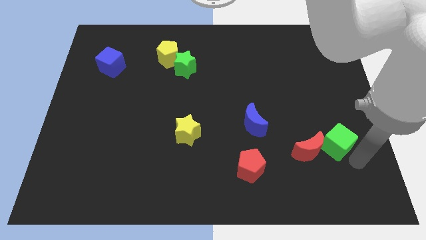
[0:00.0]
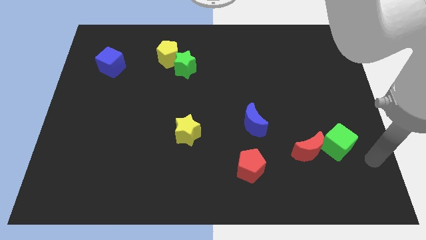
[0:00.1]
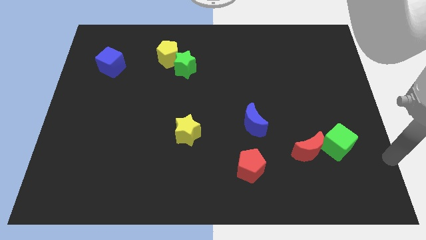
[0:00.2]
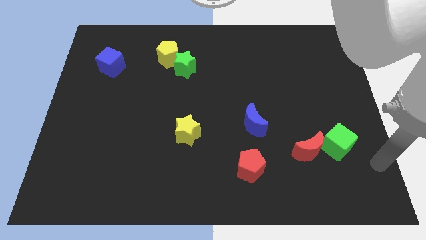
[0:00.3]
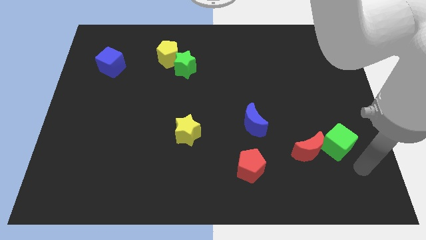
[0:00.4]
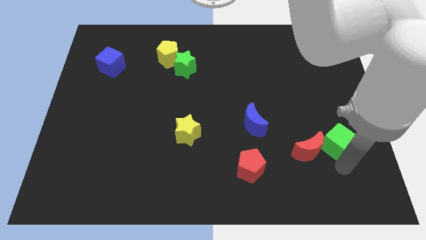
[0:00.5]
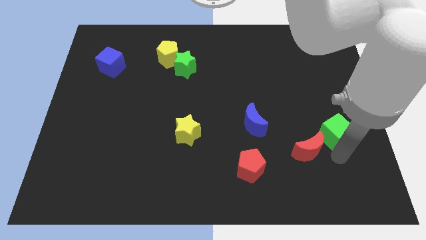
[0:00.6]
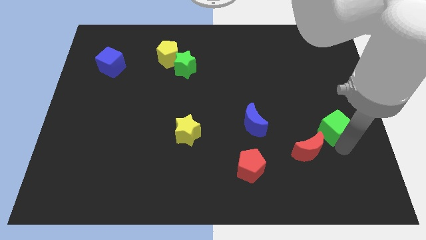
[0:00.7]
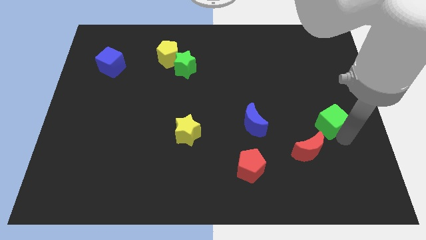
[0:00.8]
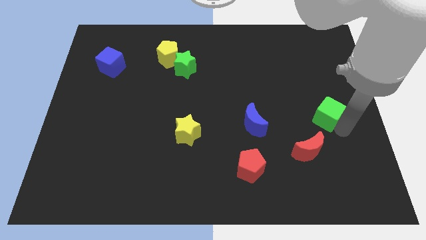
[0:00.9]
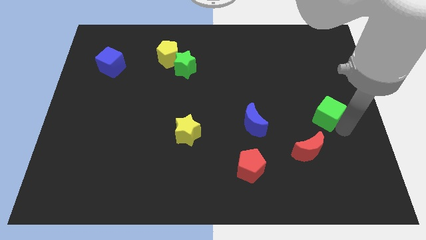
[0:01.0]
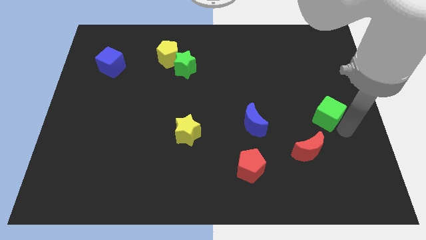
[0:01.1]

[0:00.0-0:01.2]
separate the green cube from the red crescent

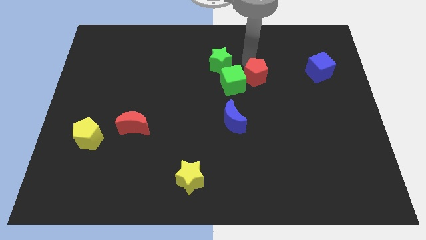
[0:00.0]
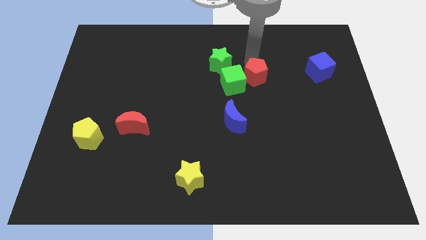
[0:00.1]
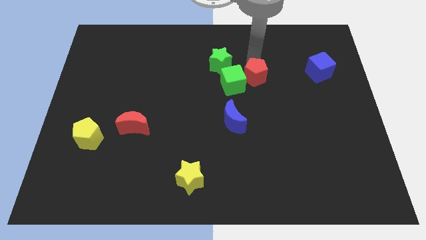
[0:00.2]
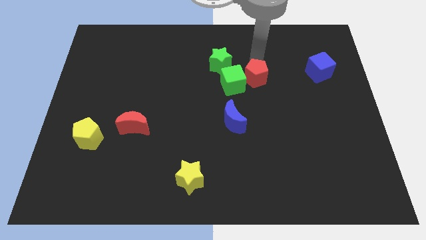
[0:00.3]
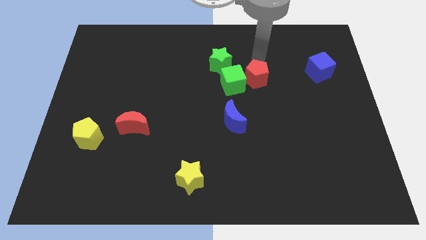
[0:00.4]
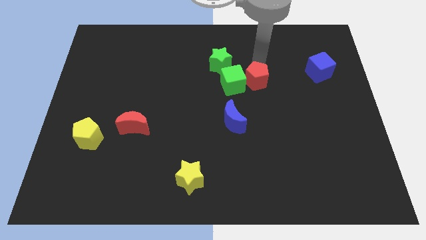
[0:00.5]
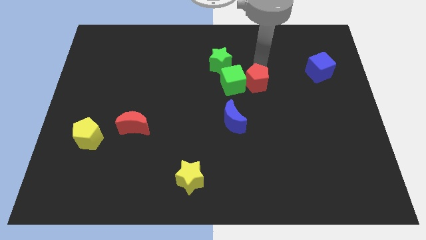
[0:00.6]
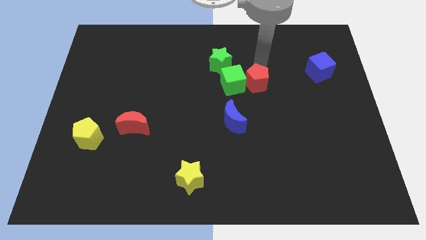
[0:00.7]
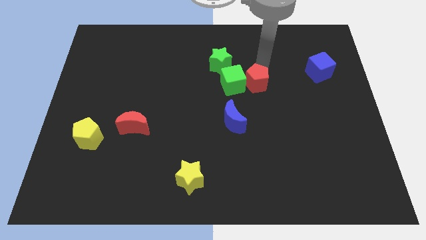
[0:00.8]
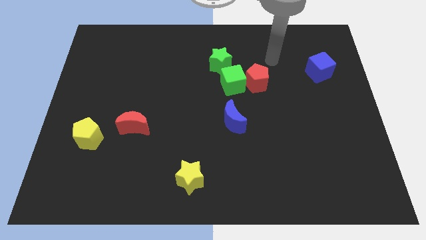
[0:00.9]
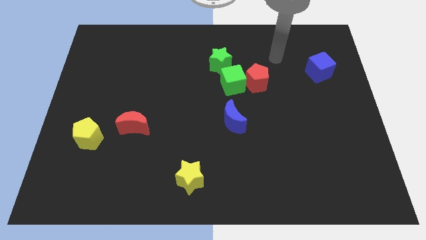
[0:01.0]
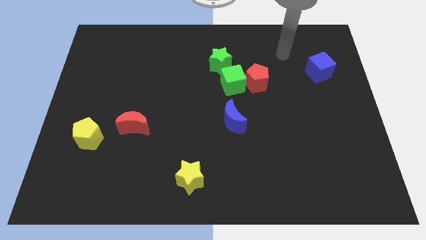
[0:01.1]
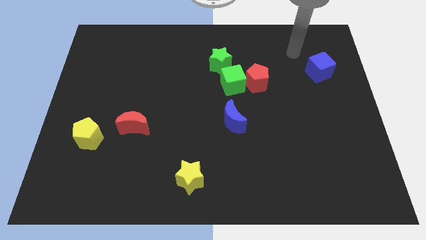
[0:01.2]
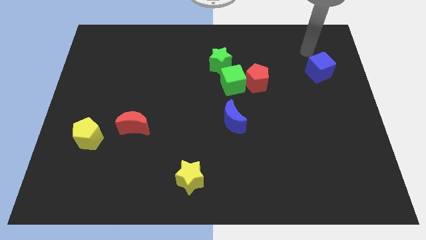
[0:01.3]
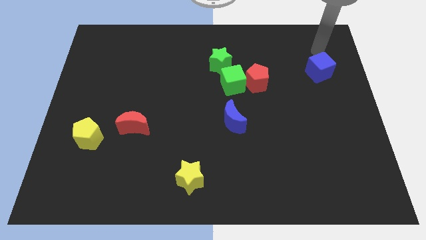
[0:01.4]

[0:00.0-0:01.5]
place red pentagon to the right side of green cube

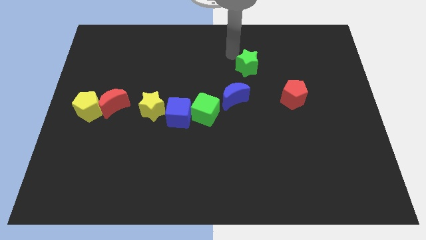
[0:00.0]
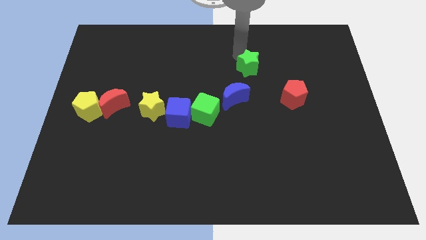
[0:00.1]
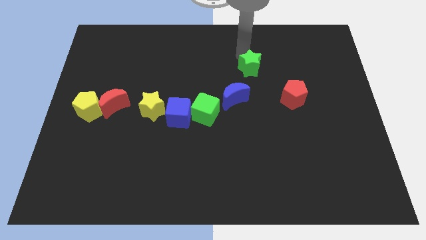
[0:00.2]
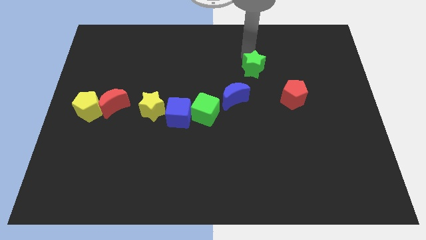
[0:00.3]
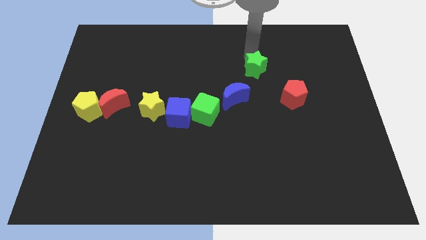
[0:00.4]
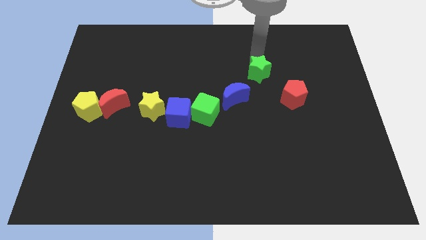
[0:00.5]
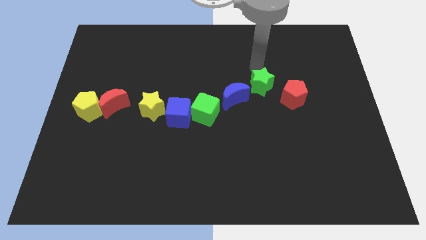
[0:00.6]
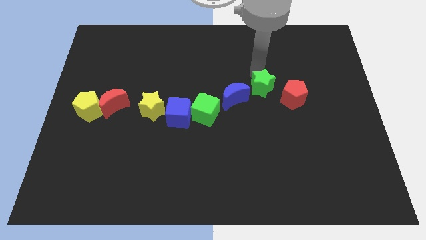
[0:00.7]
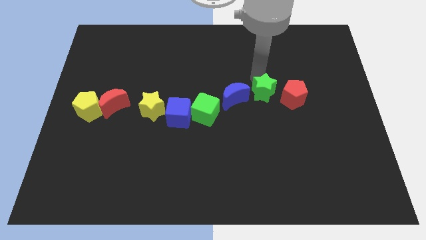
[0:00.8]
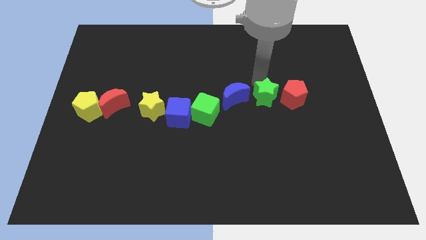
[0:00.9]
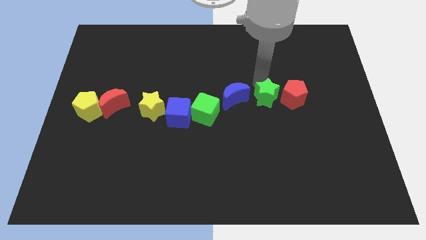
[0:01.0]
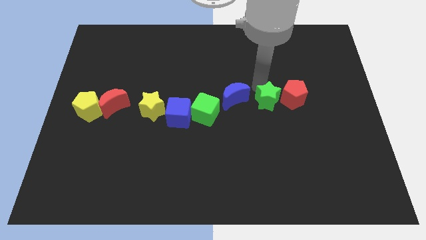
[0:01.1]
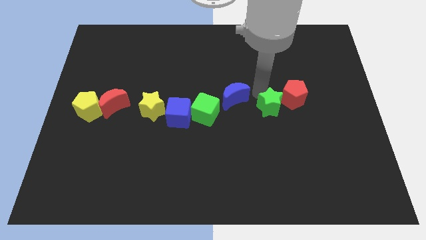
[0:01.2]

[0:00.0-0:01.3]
place the green star in between the red pentagon and blue crescent

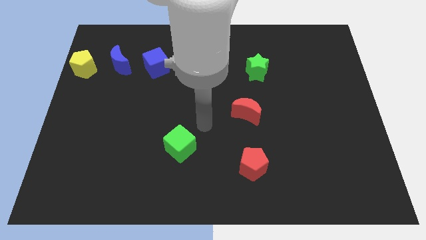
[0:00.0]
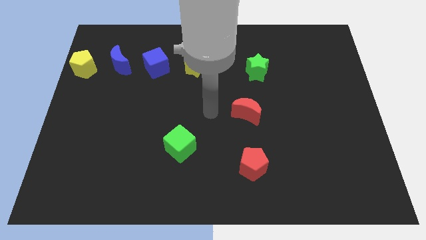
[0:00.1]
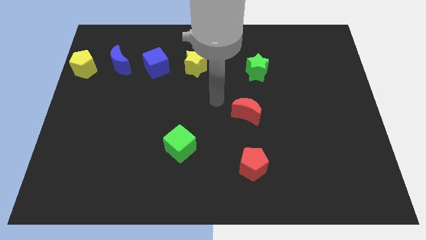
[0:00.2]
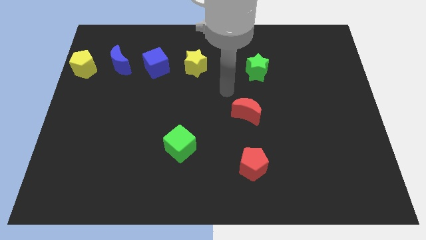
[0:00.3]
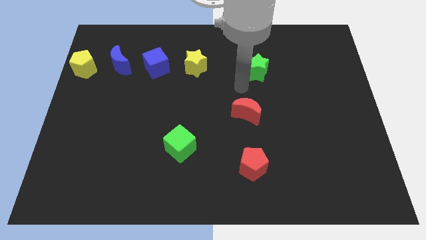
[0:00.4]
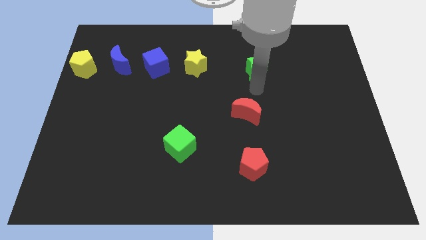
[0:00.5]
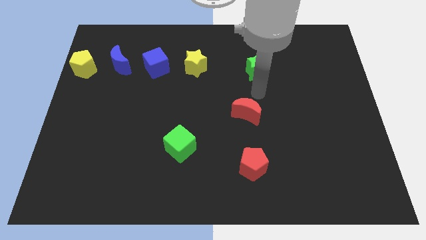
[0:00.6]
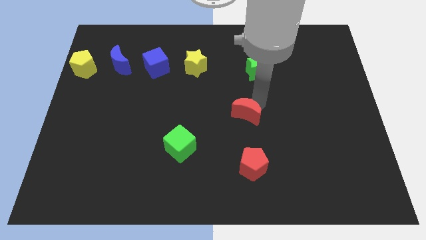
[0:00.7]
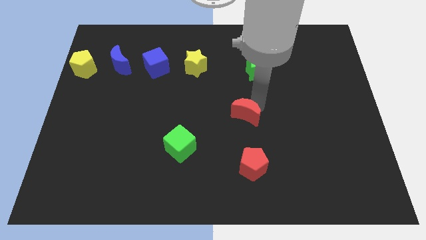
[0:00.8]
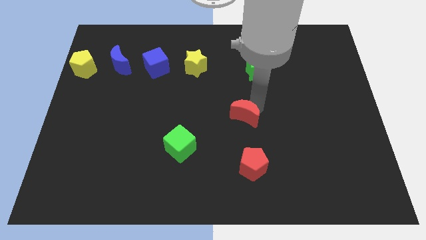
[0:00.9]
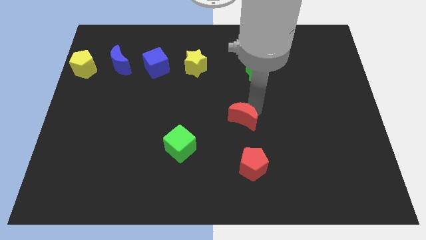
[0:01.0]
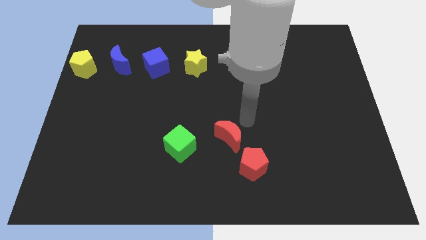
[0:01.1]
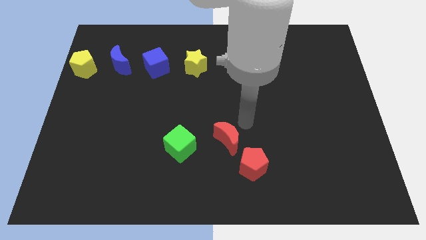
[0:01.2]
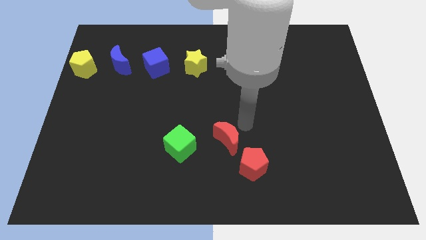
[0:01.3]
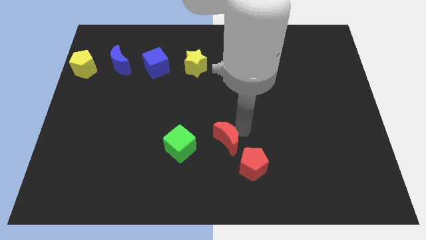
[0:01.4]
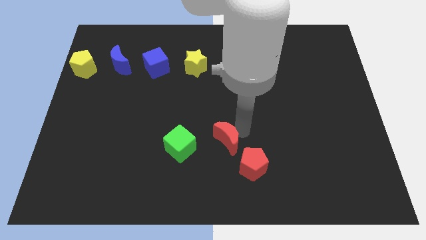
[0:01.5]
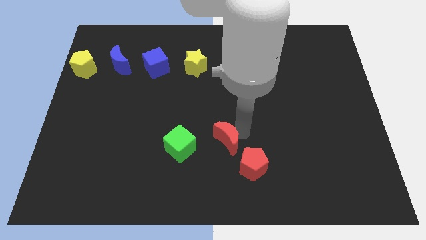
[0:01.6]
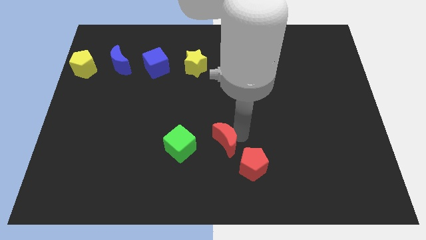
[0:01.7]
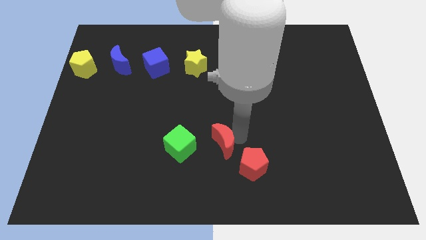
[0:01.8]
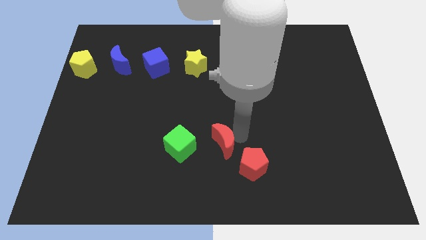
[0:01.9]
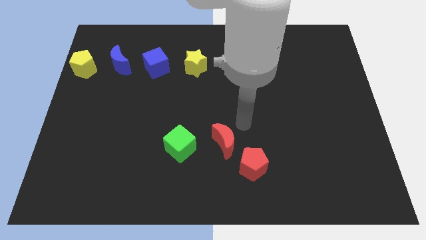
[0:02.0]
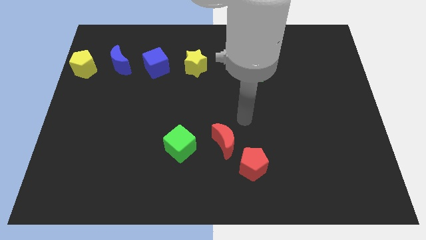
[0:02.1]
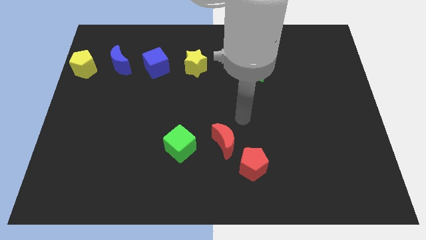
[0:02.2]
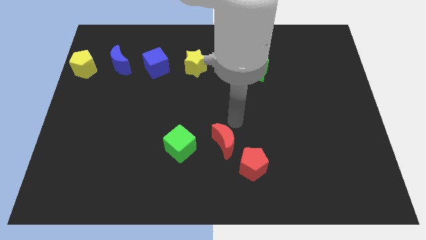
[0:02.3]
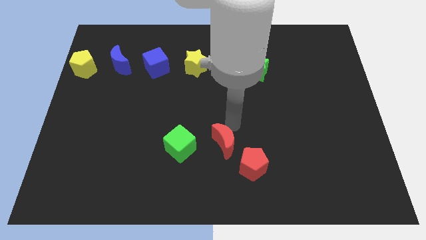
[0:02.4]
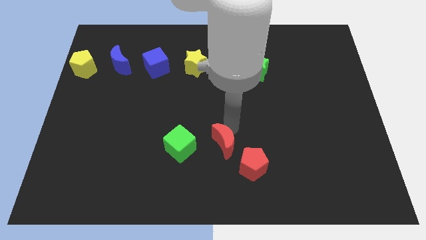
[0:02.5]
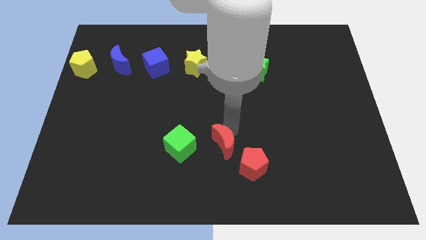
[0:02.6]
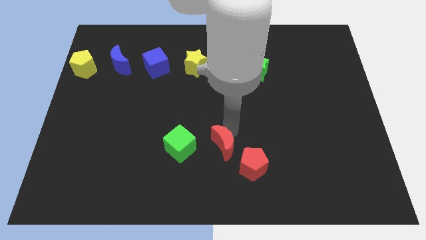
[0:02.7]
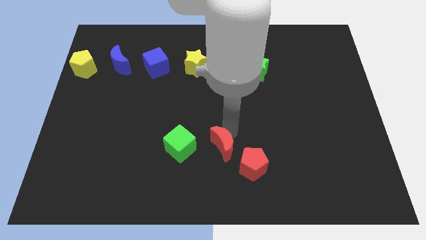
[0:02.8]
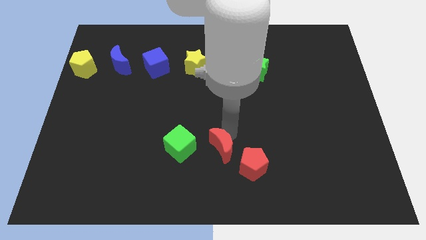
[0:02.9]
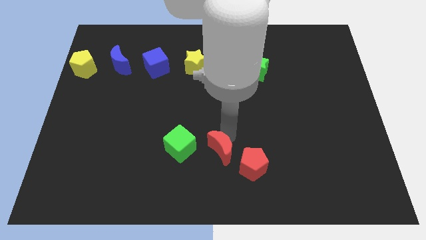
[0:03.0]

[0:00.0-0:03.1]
push the red crescent to the right of the green cube

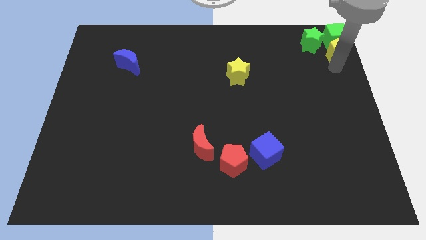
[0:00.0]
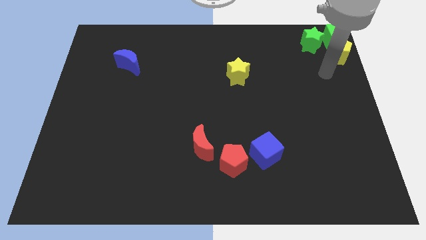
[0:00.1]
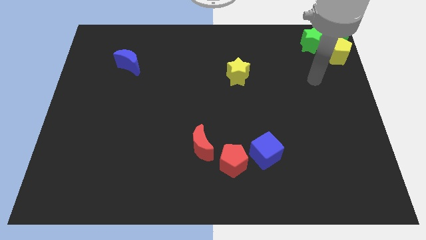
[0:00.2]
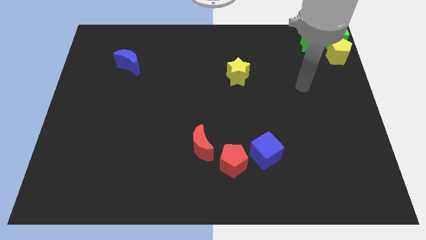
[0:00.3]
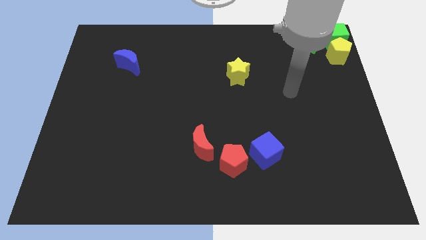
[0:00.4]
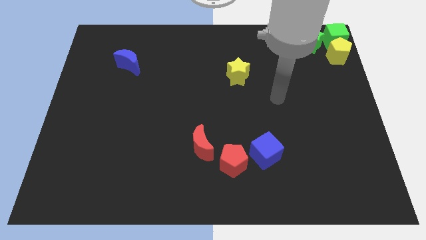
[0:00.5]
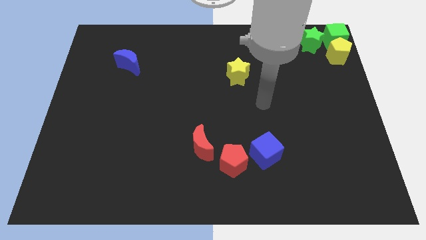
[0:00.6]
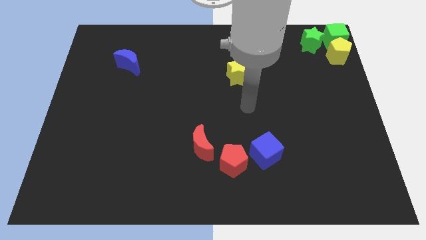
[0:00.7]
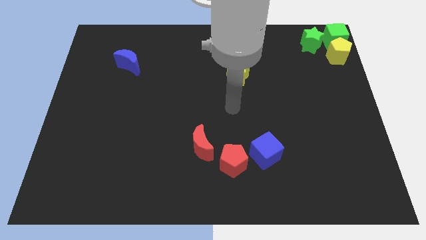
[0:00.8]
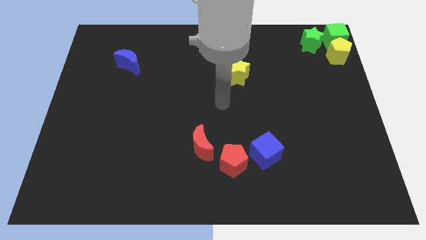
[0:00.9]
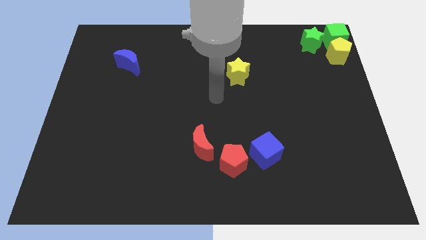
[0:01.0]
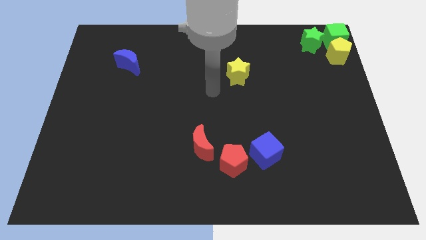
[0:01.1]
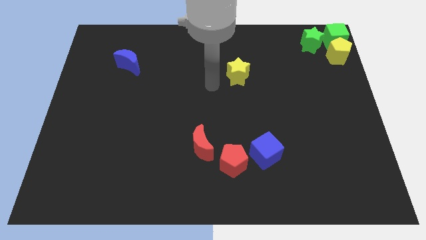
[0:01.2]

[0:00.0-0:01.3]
move away from the yellow pentagon

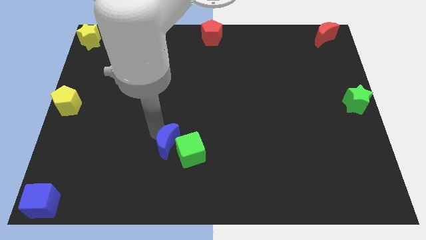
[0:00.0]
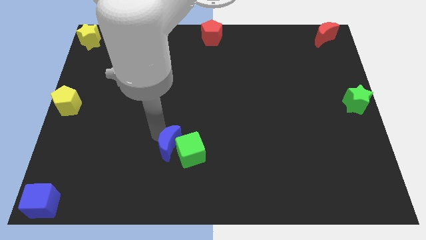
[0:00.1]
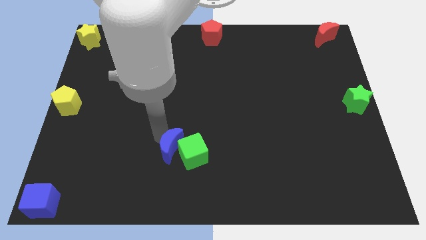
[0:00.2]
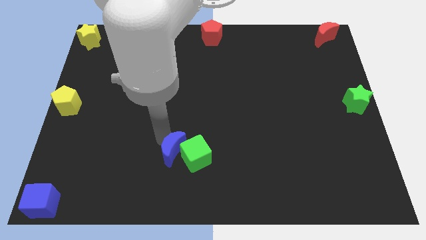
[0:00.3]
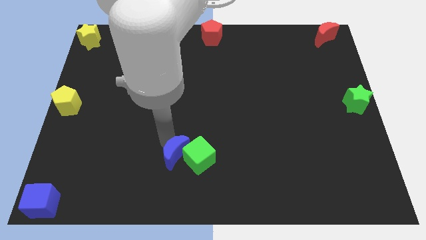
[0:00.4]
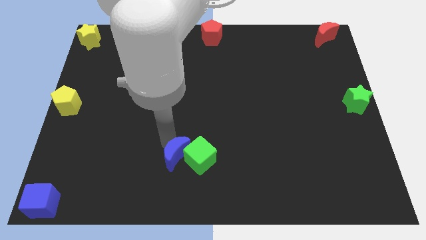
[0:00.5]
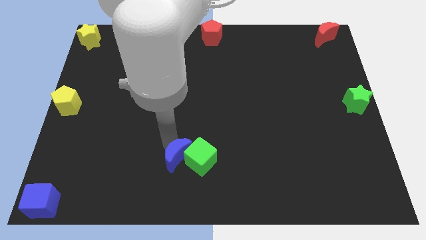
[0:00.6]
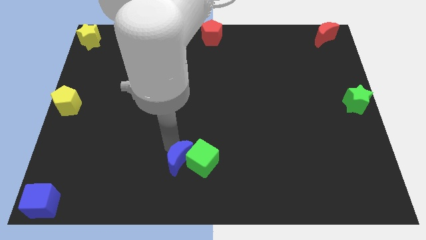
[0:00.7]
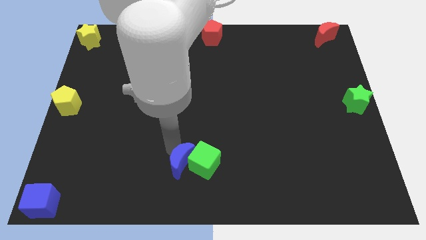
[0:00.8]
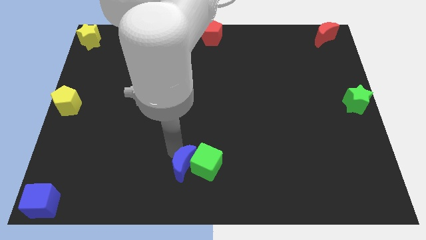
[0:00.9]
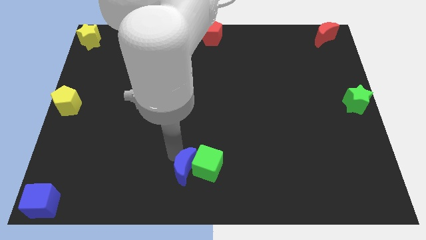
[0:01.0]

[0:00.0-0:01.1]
move the blue crescent and green cube to the bottom middle of the board
